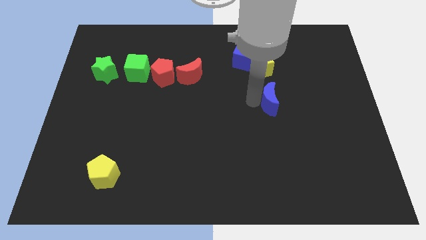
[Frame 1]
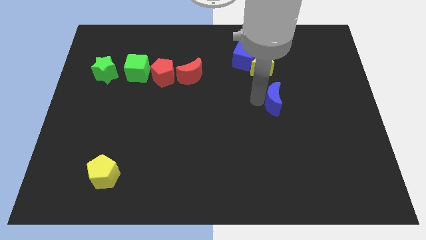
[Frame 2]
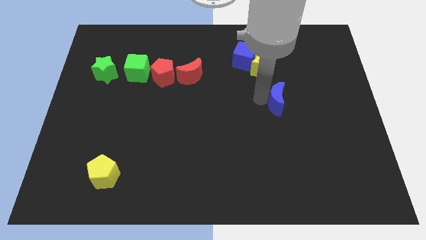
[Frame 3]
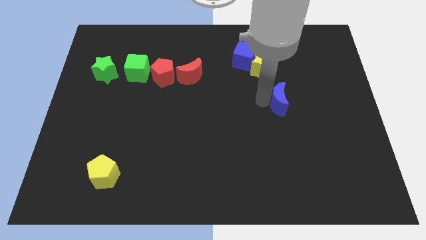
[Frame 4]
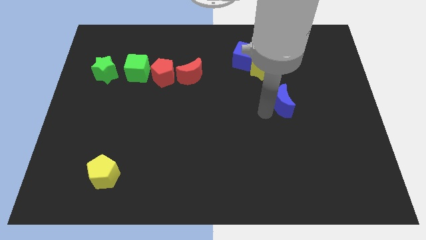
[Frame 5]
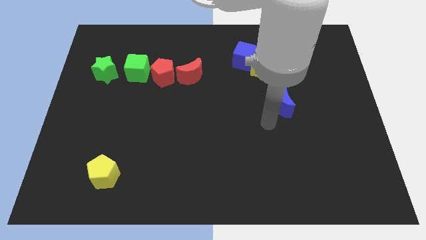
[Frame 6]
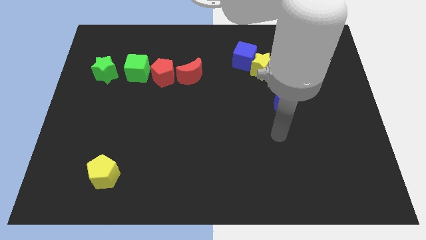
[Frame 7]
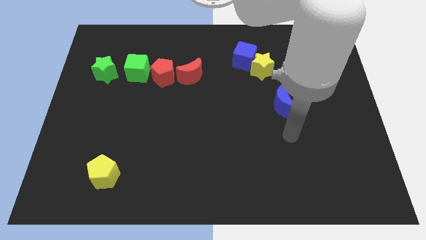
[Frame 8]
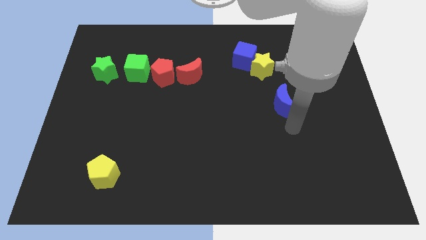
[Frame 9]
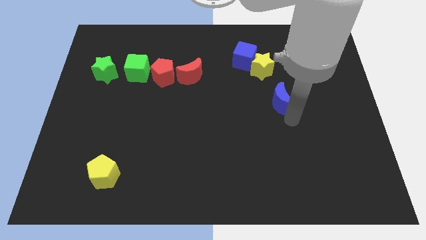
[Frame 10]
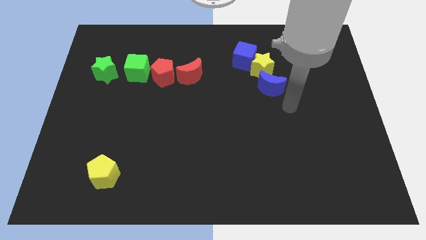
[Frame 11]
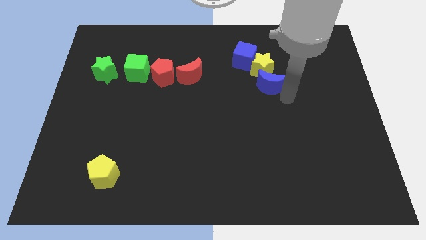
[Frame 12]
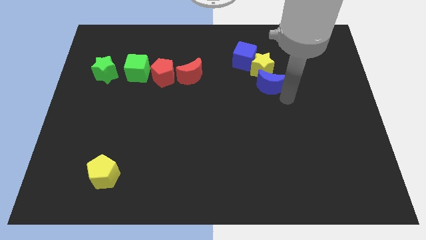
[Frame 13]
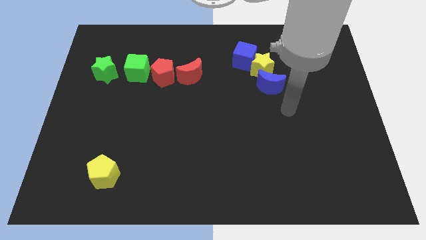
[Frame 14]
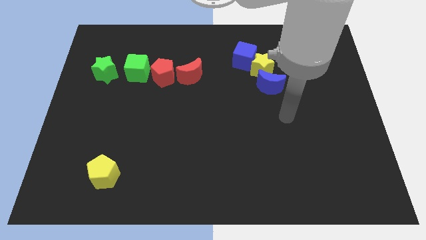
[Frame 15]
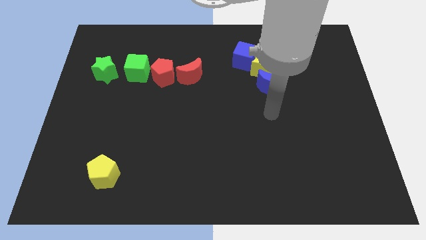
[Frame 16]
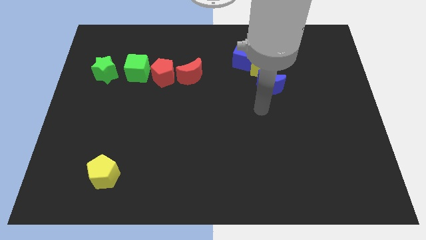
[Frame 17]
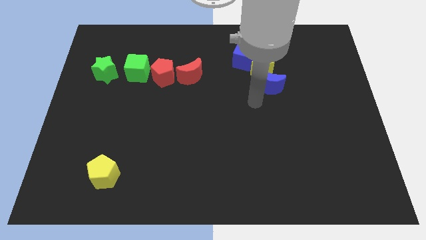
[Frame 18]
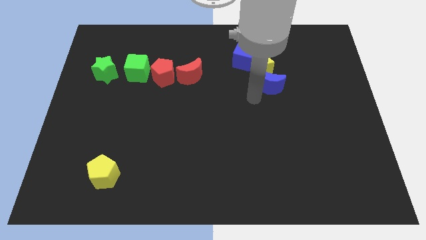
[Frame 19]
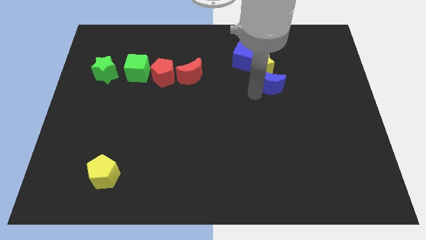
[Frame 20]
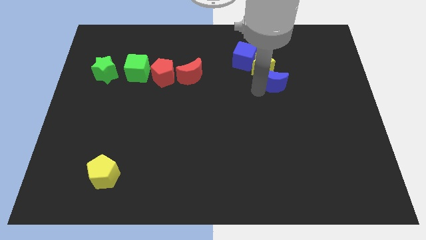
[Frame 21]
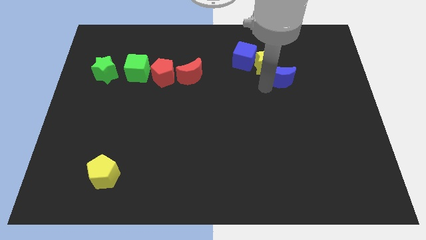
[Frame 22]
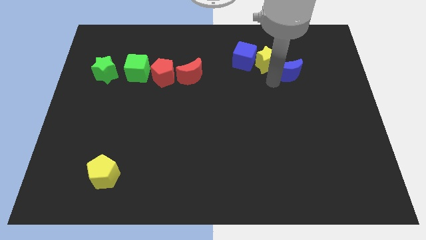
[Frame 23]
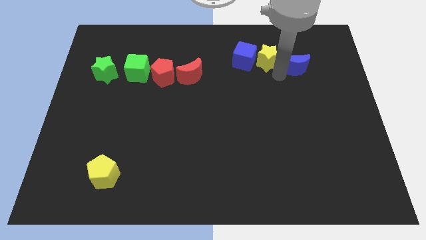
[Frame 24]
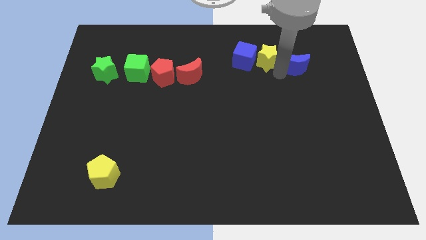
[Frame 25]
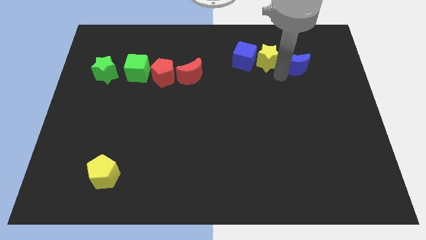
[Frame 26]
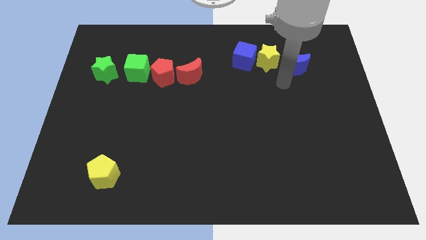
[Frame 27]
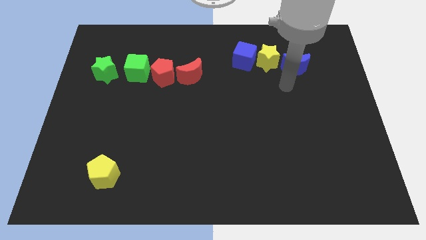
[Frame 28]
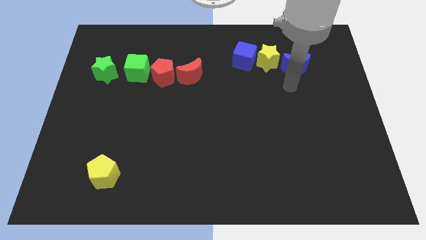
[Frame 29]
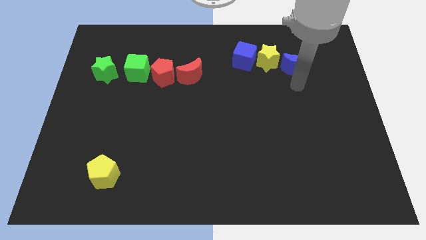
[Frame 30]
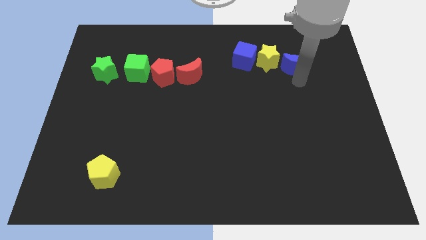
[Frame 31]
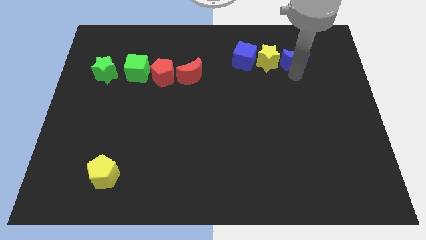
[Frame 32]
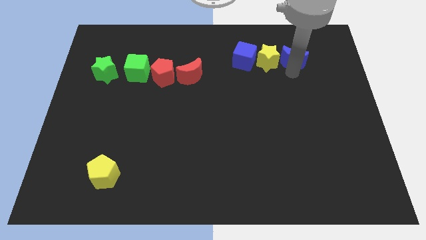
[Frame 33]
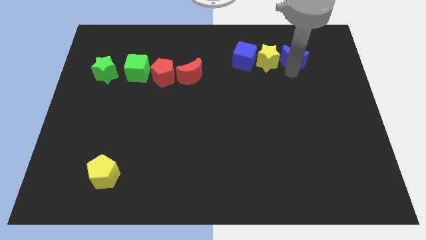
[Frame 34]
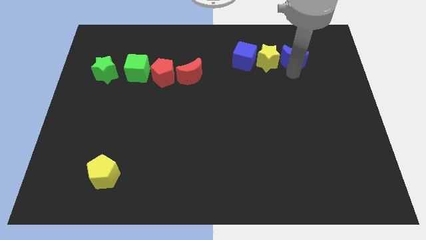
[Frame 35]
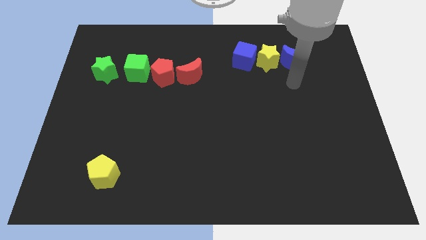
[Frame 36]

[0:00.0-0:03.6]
place the yellow star and blue crescent at the right side of the blue cube

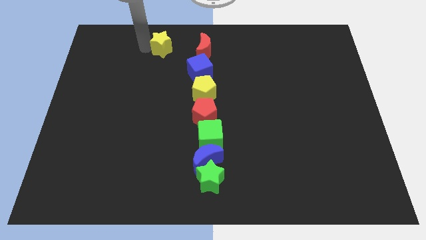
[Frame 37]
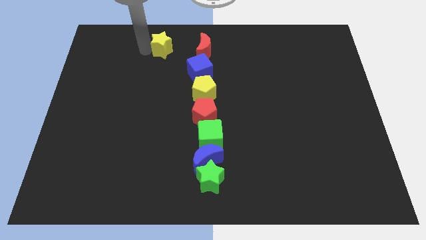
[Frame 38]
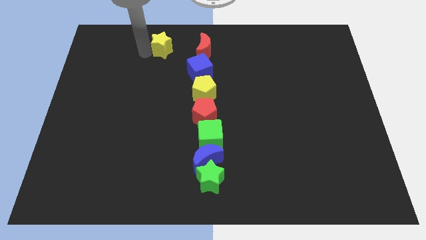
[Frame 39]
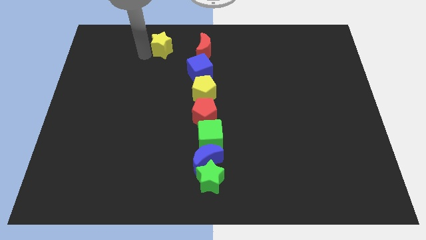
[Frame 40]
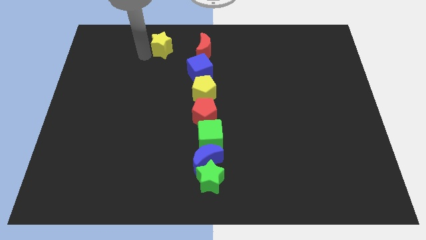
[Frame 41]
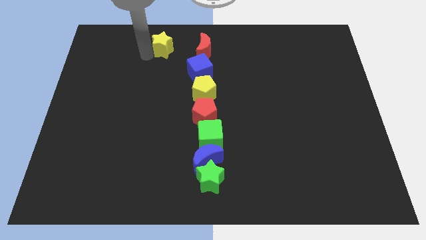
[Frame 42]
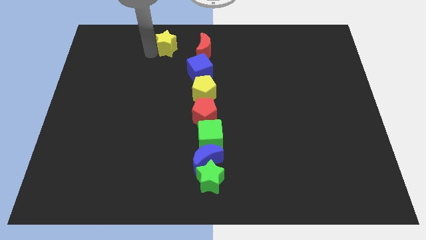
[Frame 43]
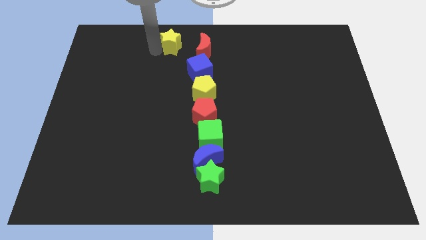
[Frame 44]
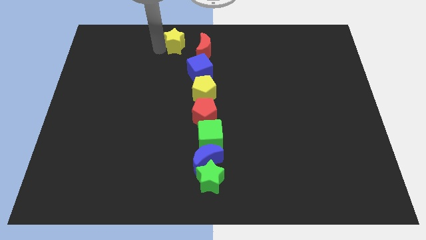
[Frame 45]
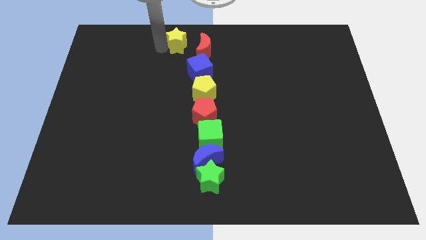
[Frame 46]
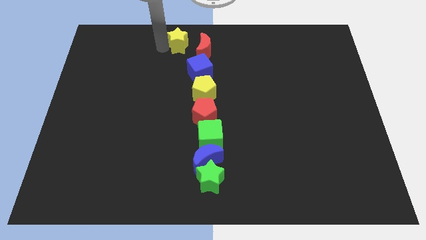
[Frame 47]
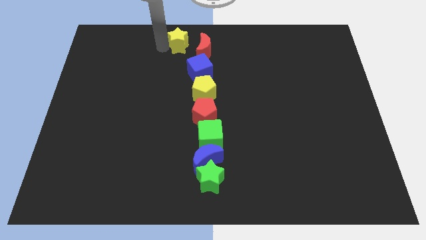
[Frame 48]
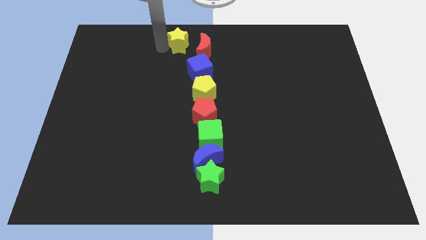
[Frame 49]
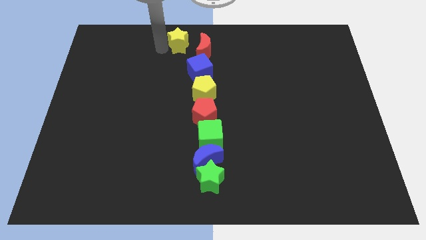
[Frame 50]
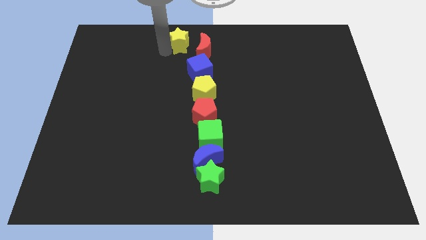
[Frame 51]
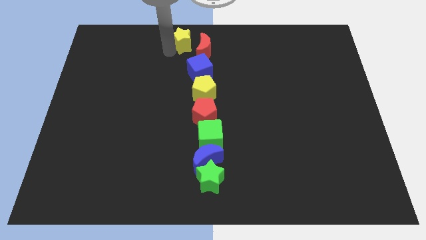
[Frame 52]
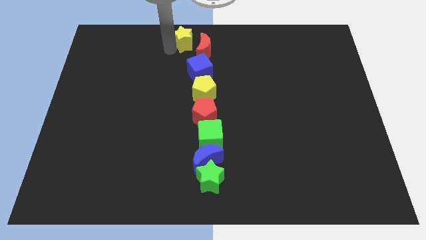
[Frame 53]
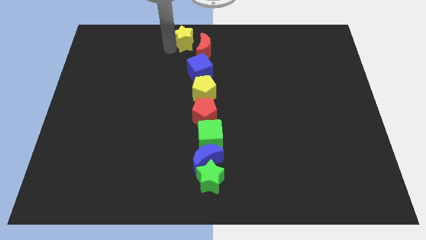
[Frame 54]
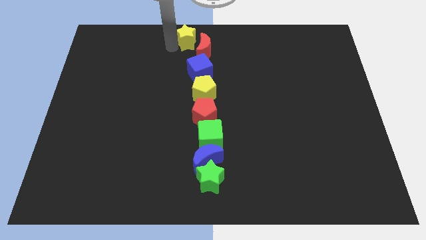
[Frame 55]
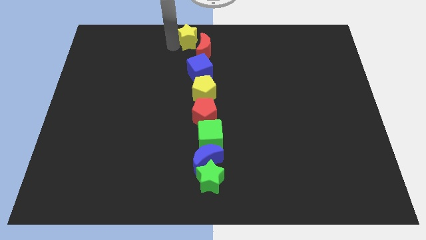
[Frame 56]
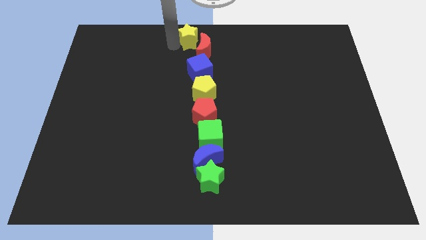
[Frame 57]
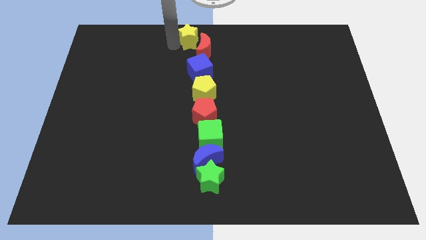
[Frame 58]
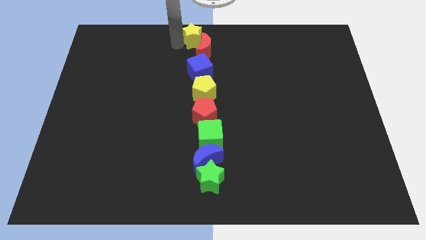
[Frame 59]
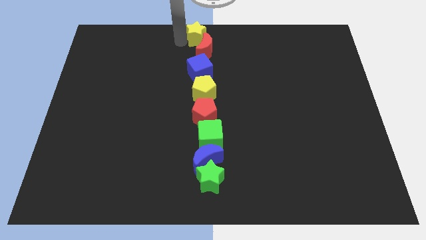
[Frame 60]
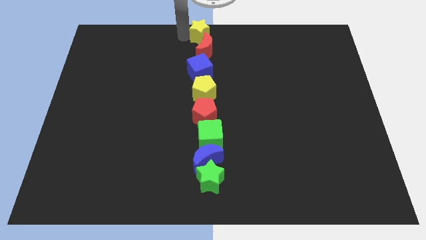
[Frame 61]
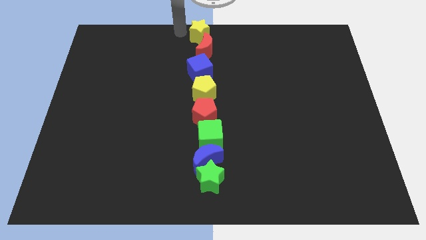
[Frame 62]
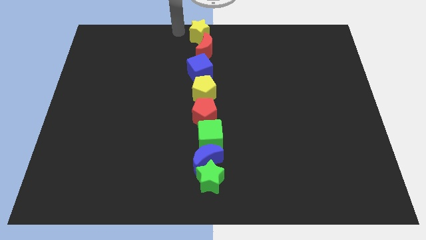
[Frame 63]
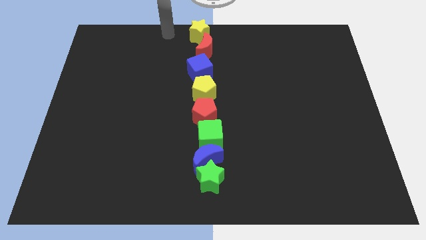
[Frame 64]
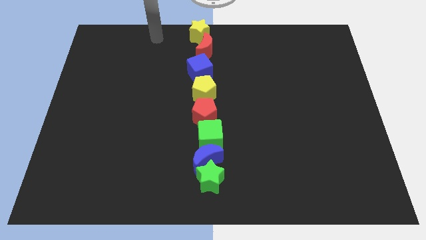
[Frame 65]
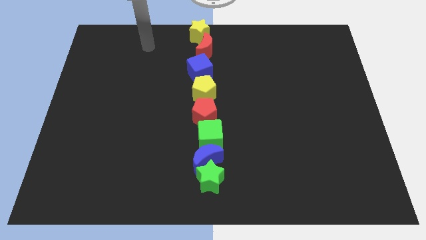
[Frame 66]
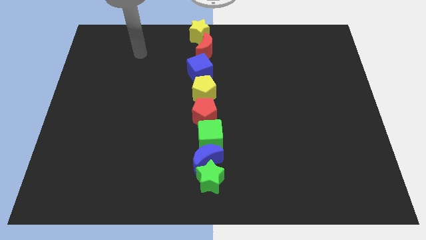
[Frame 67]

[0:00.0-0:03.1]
place the yellow star above the red moon

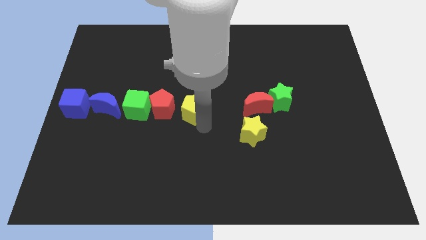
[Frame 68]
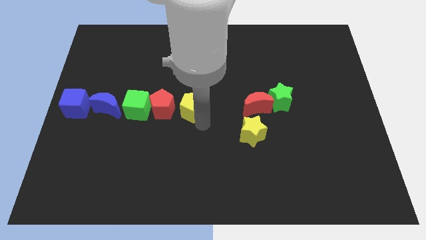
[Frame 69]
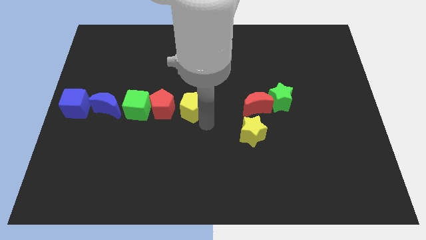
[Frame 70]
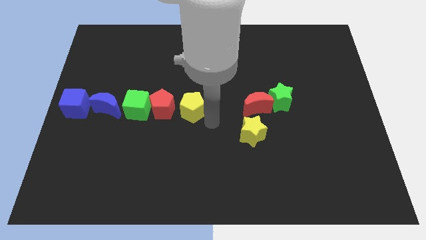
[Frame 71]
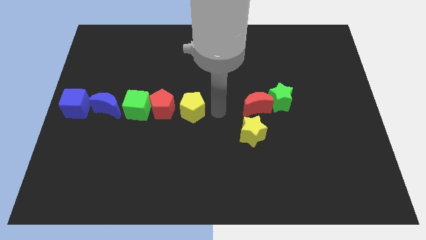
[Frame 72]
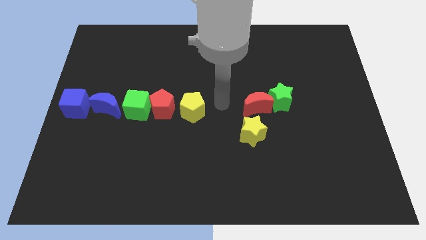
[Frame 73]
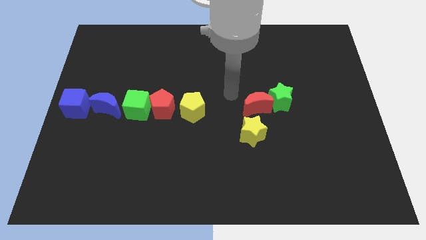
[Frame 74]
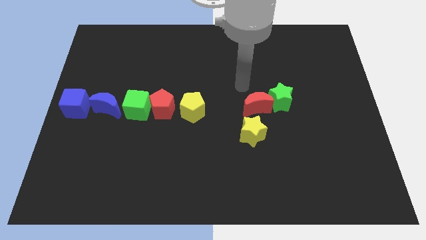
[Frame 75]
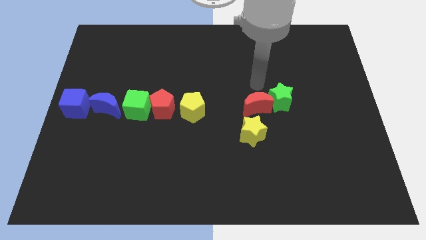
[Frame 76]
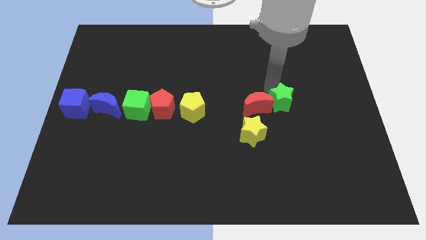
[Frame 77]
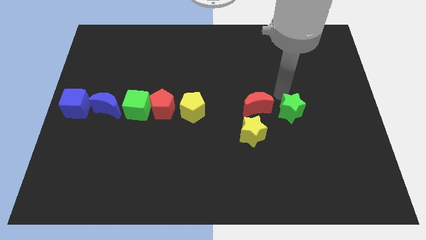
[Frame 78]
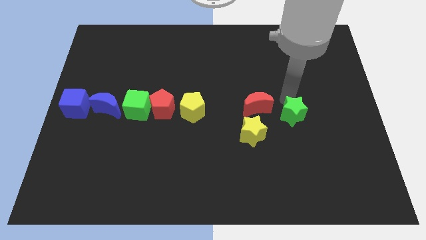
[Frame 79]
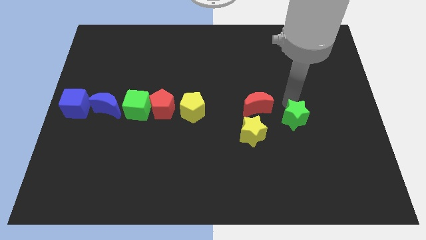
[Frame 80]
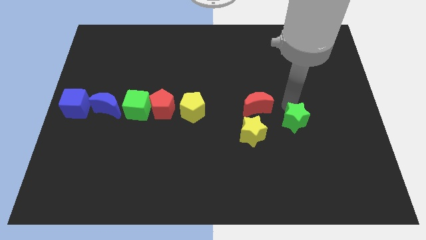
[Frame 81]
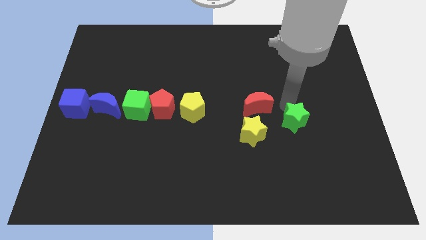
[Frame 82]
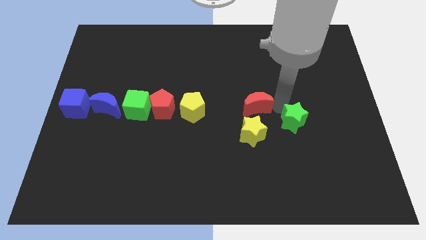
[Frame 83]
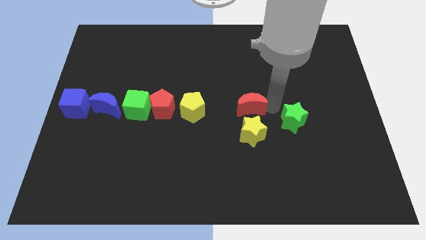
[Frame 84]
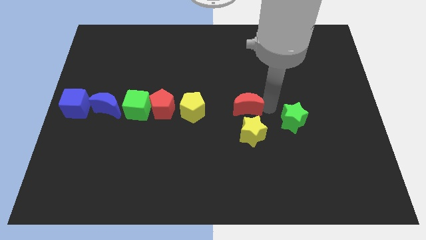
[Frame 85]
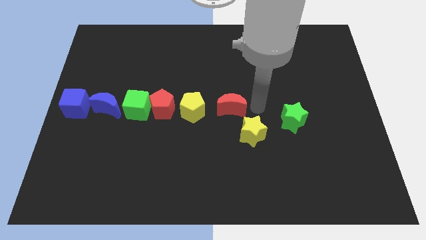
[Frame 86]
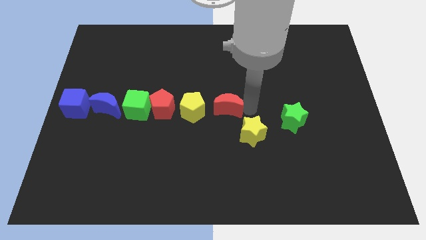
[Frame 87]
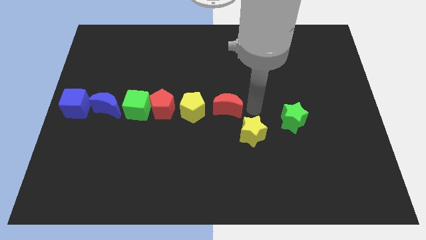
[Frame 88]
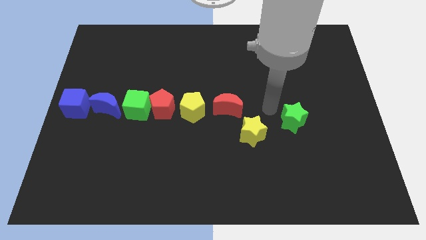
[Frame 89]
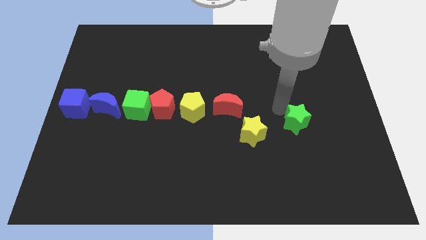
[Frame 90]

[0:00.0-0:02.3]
place the red moon to the right of the yellow pentagon
